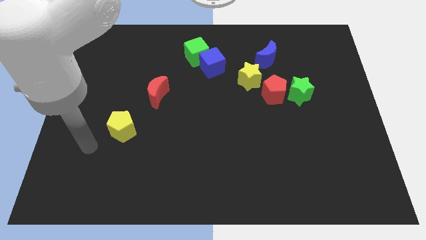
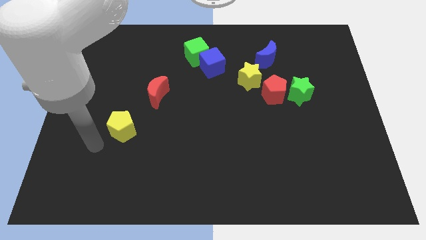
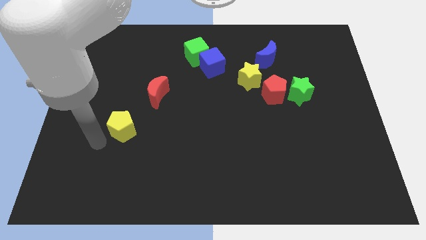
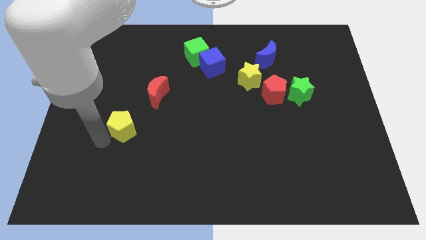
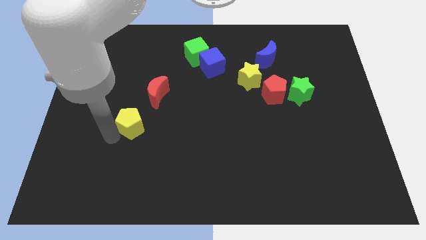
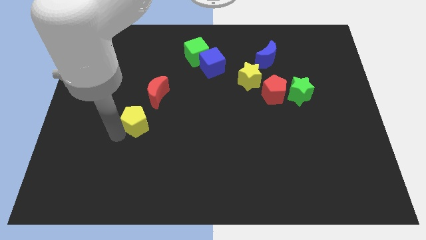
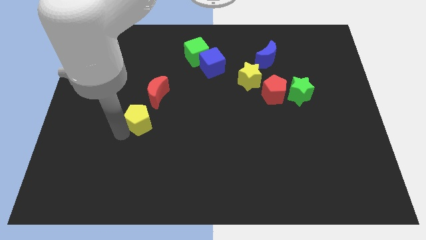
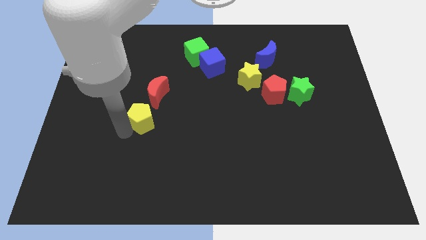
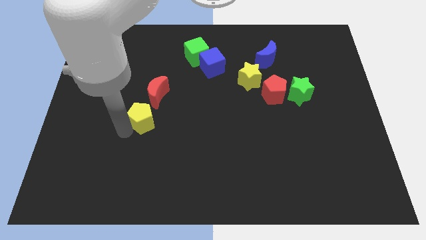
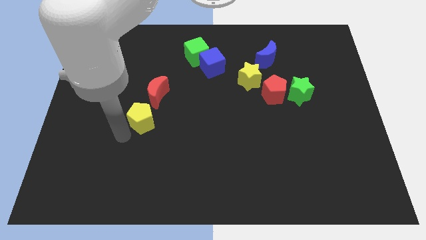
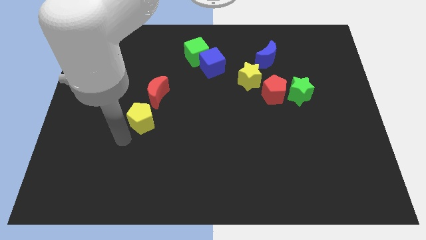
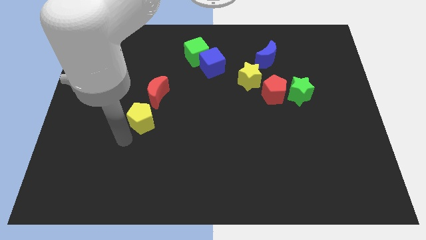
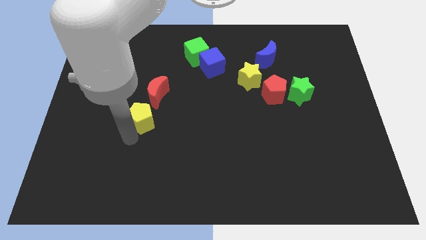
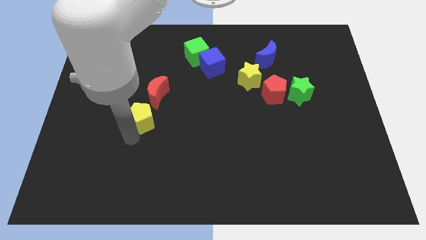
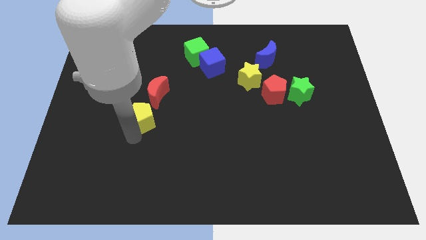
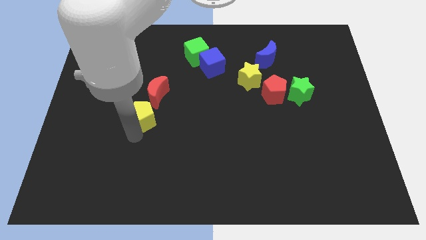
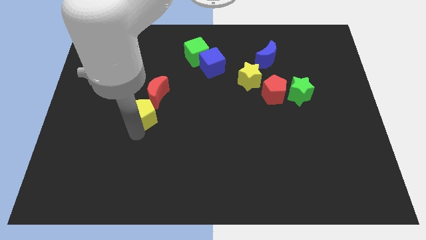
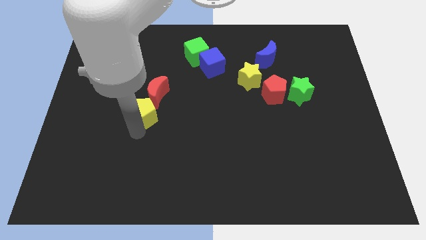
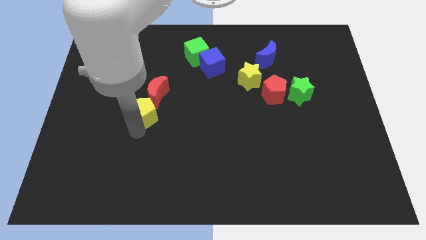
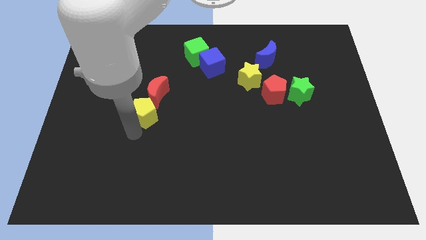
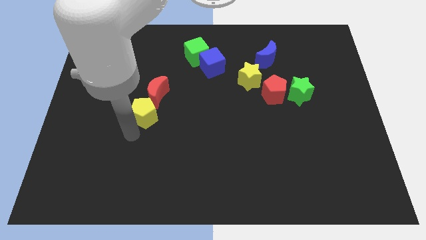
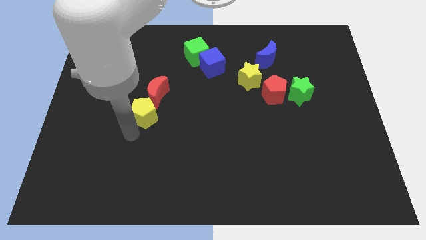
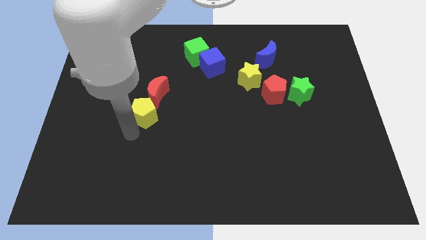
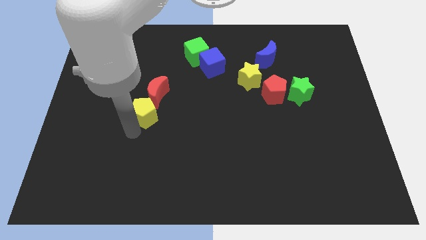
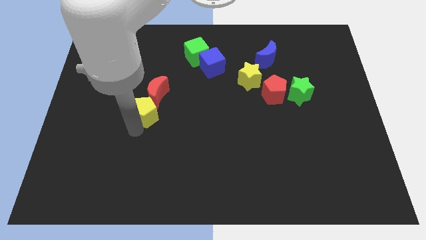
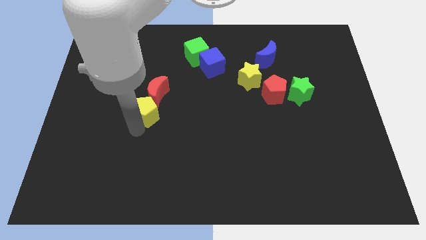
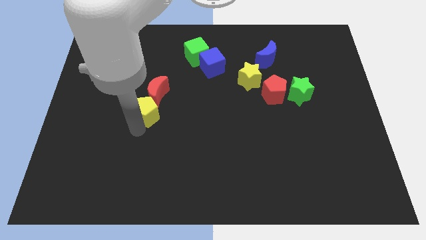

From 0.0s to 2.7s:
push the yellow pentagon bottom of the red crescent

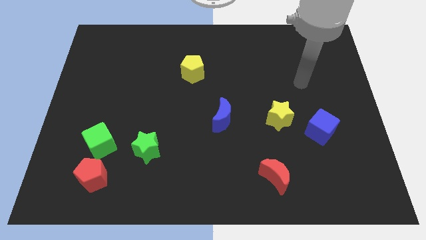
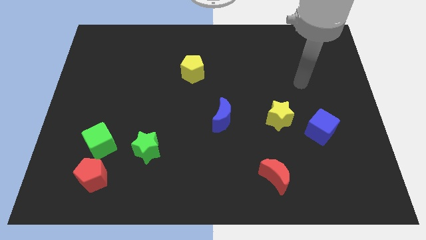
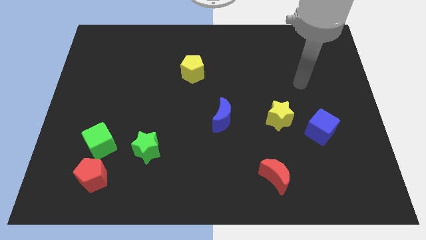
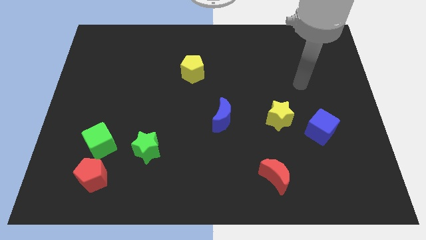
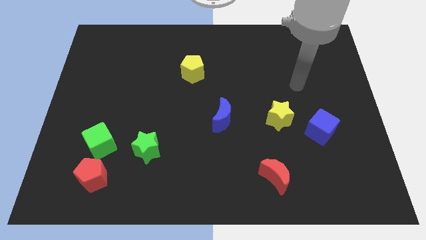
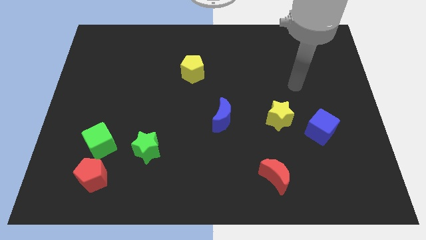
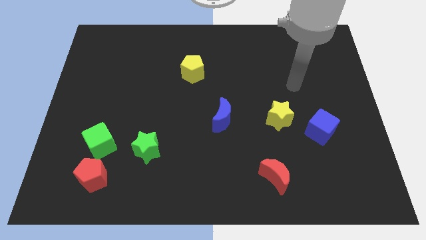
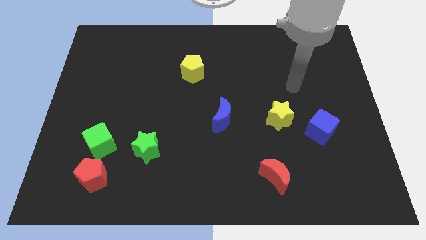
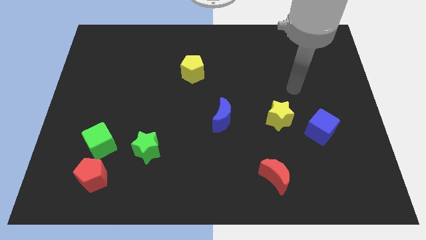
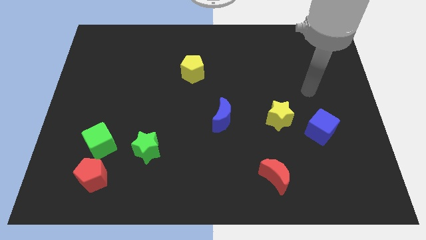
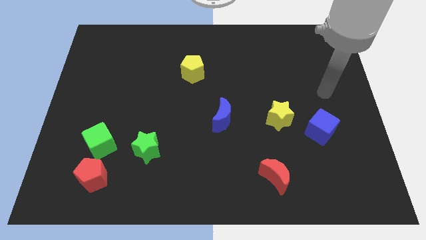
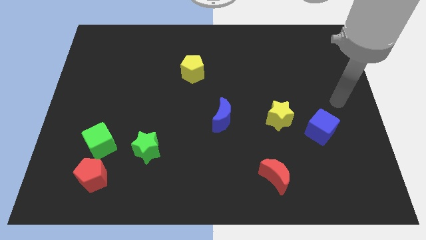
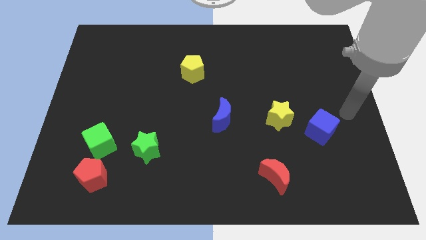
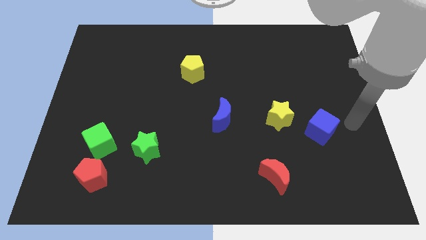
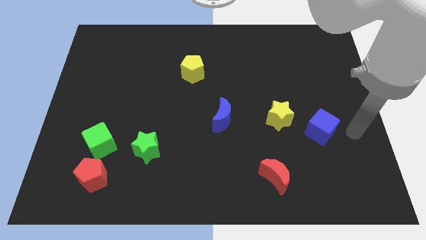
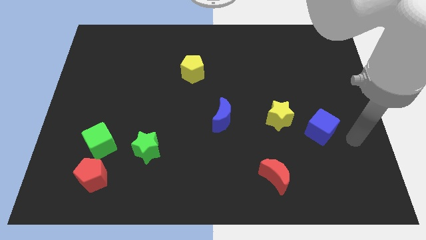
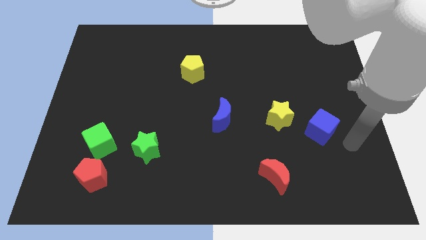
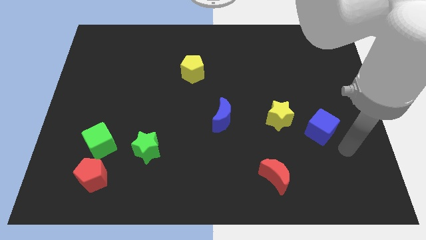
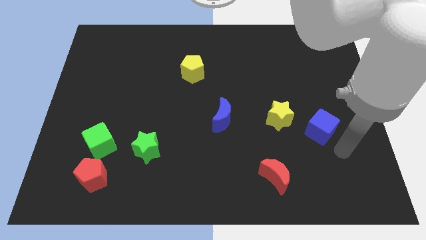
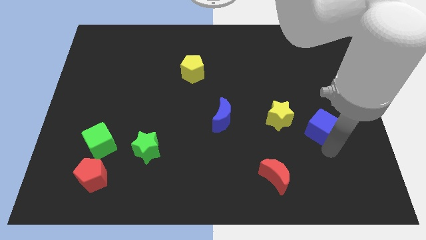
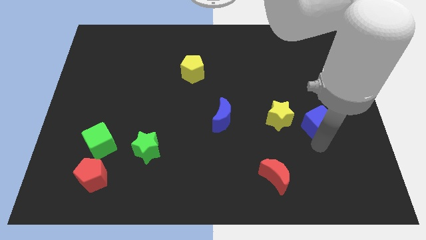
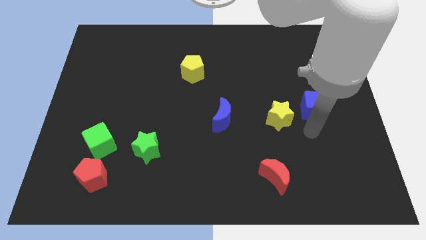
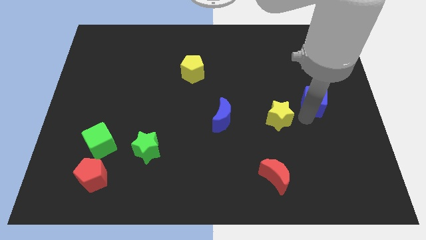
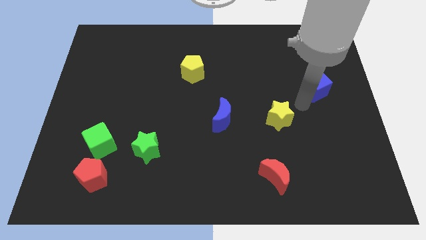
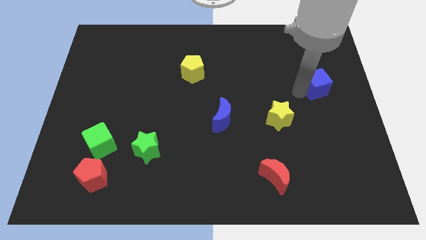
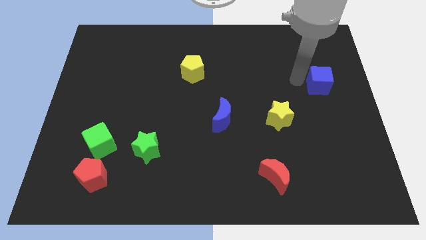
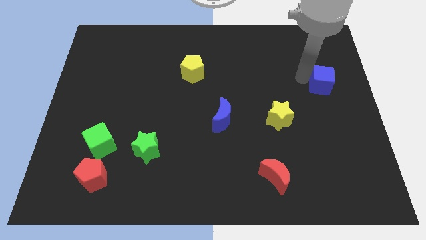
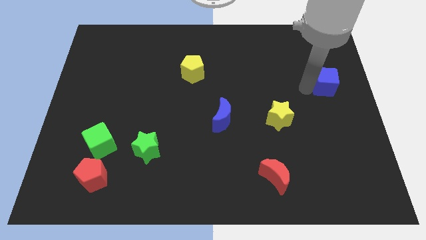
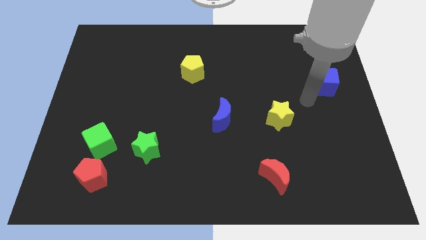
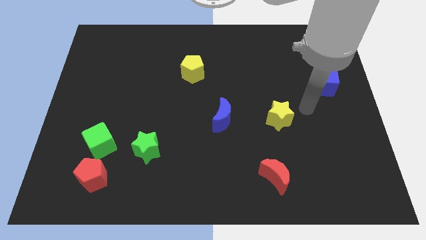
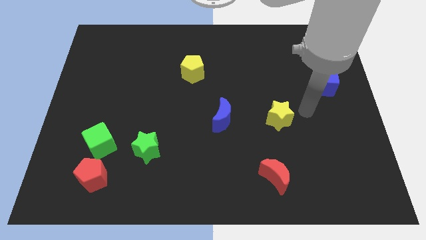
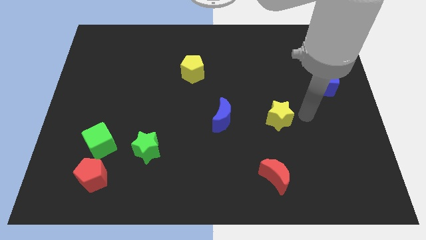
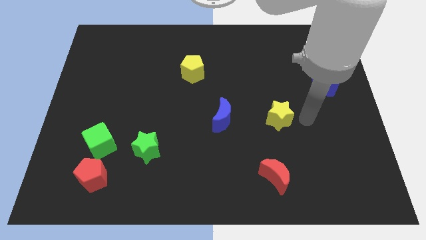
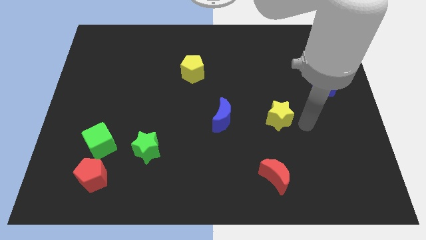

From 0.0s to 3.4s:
move the blue cube up slightly

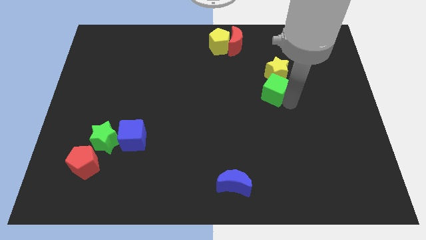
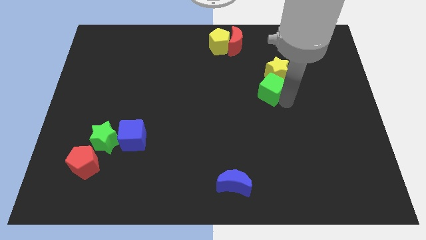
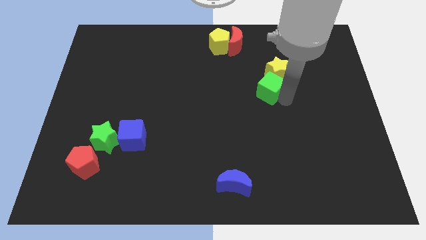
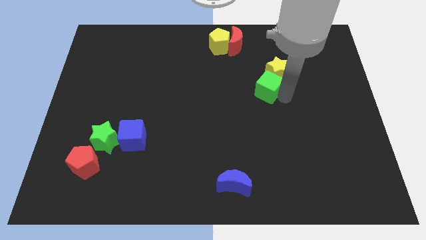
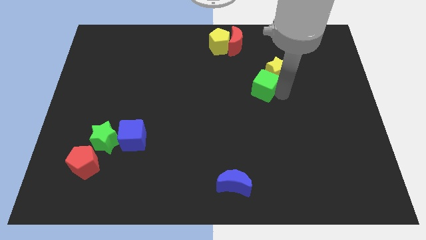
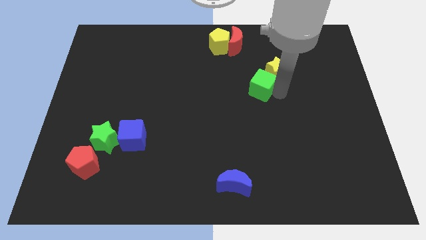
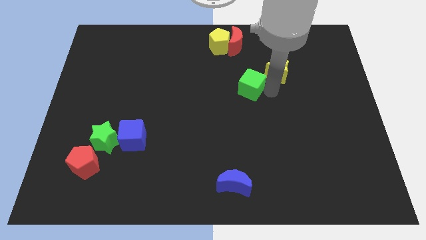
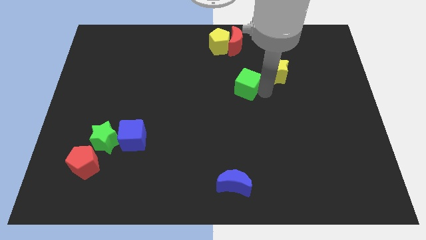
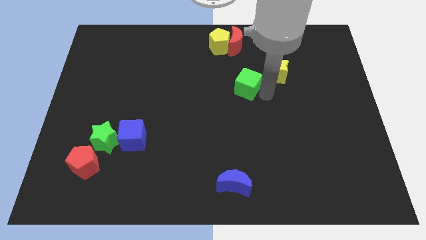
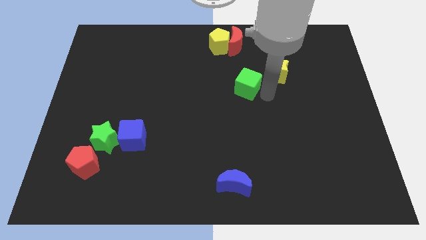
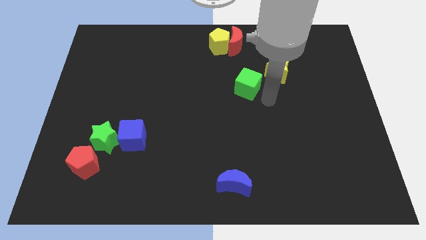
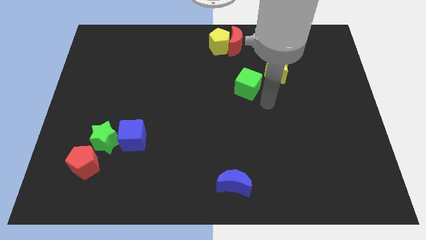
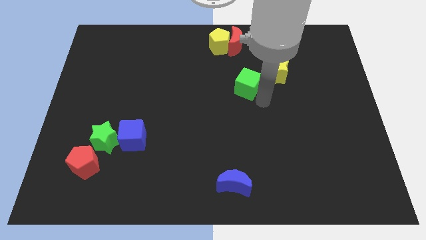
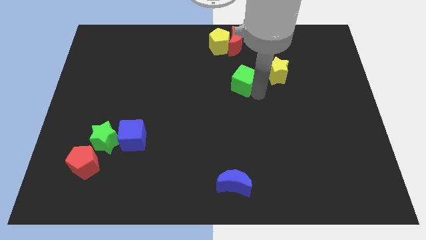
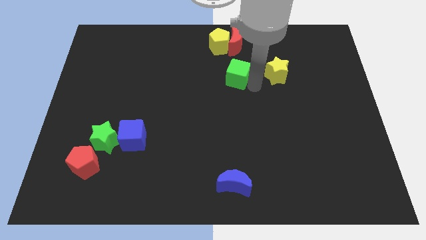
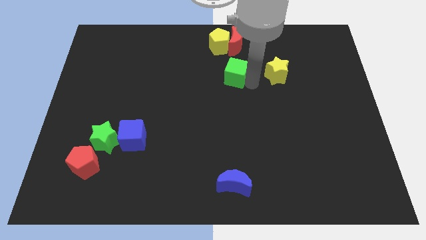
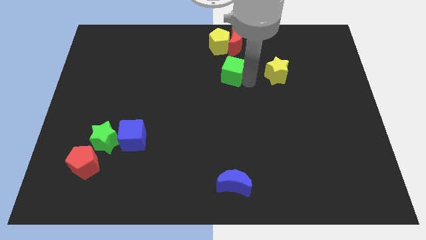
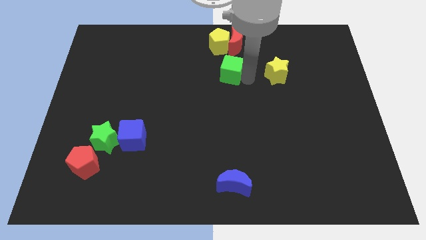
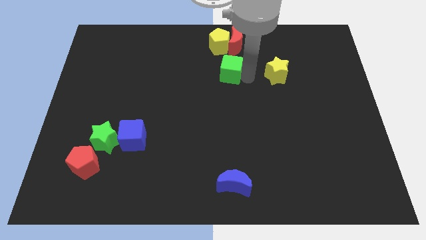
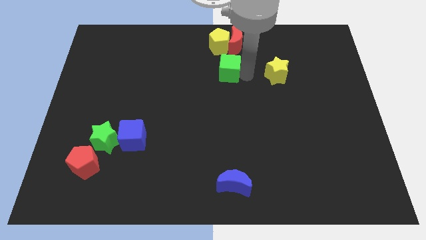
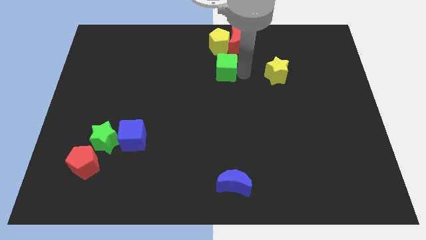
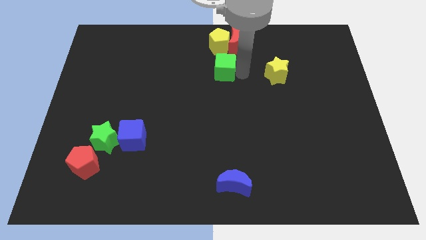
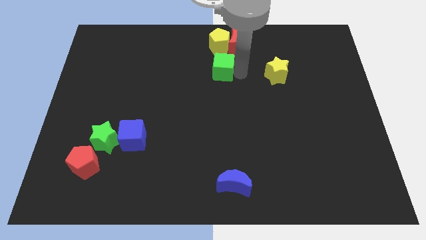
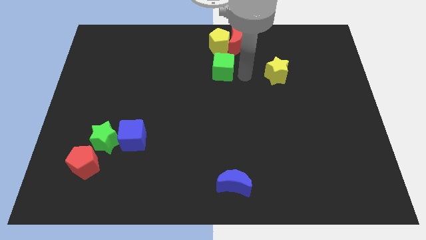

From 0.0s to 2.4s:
separate the green cube from the yellow star

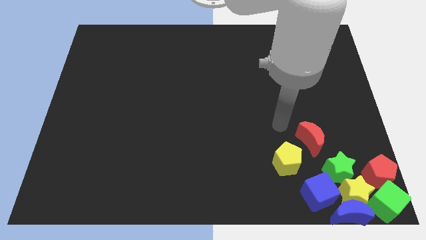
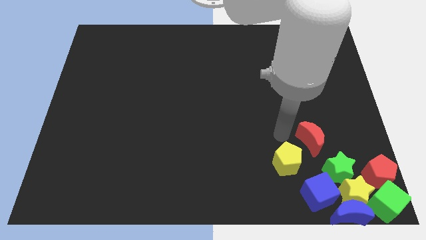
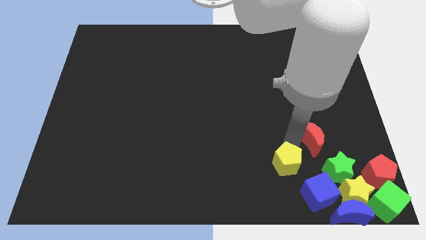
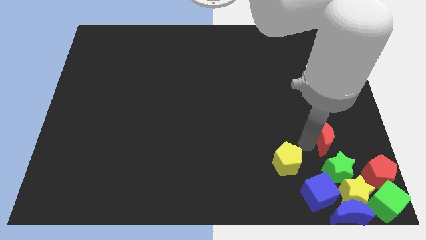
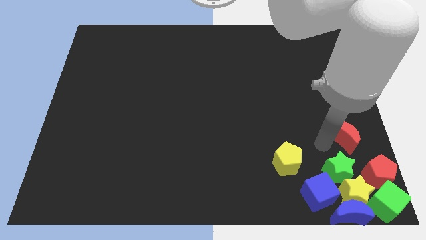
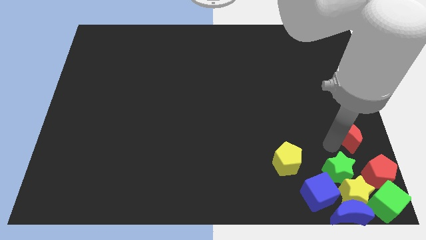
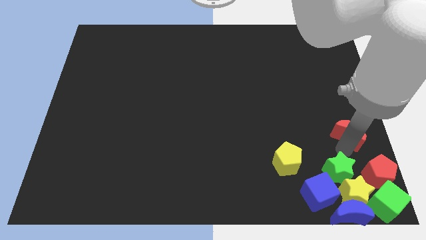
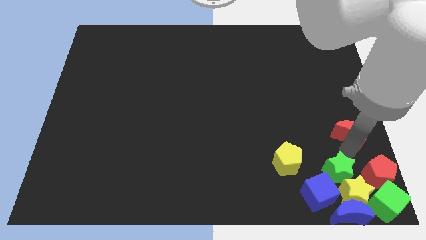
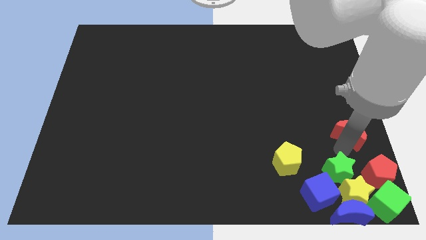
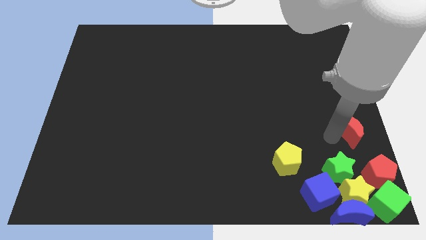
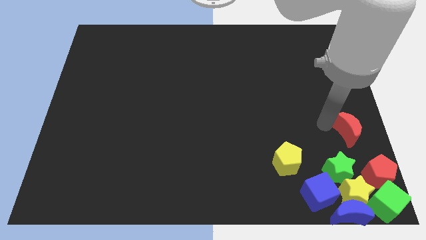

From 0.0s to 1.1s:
move the red moon away from the yellow pentagon
